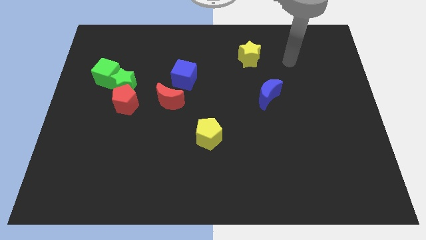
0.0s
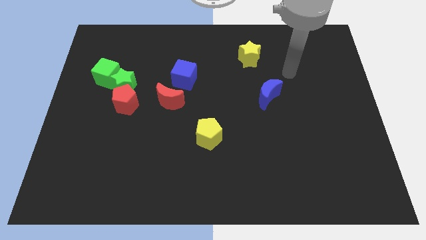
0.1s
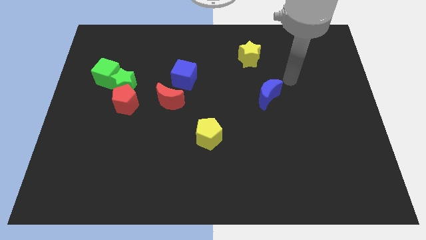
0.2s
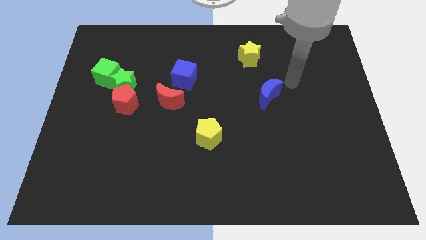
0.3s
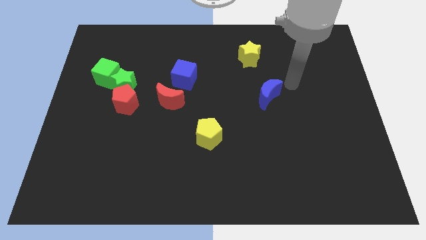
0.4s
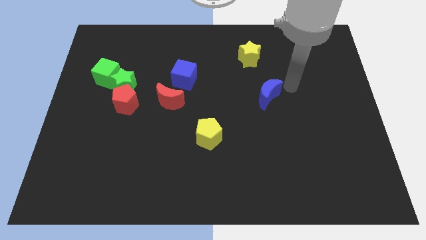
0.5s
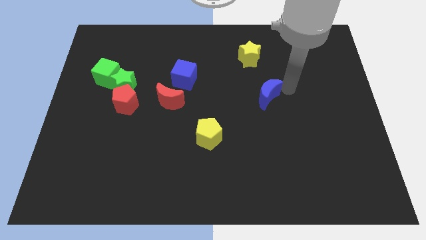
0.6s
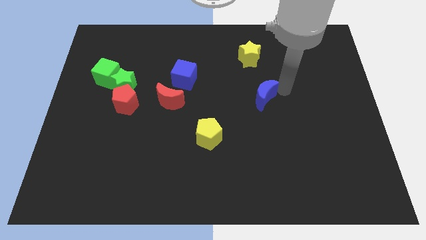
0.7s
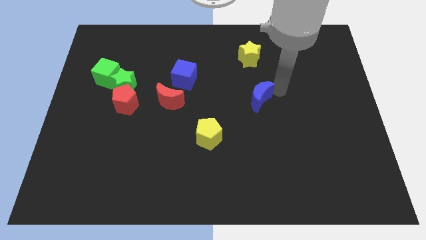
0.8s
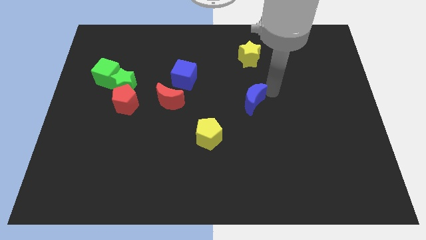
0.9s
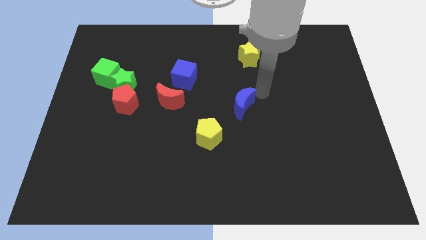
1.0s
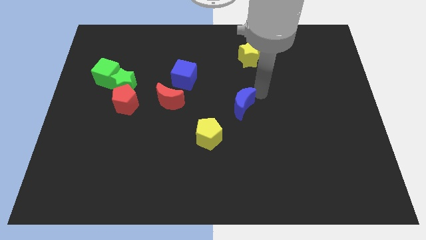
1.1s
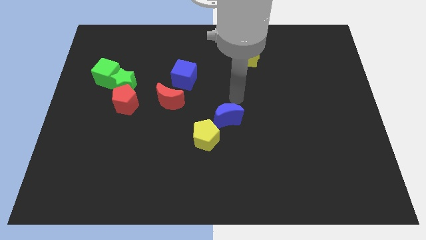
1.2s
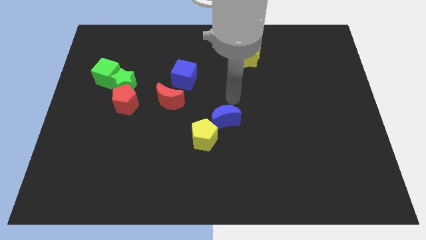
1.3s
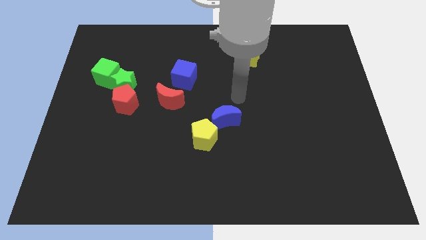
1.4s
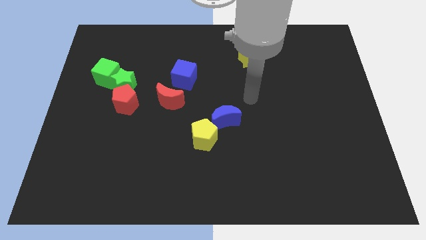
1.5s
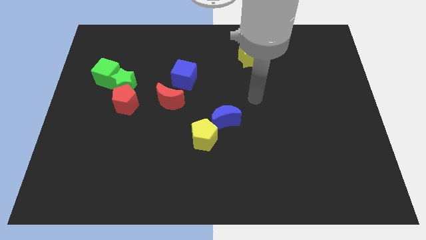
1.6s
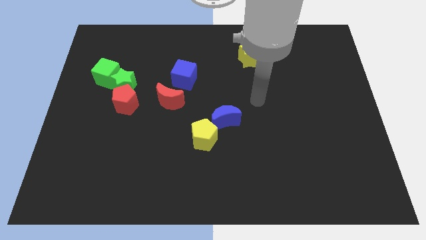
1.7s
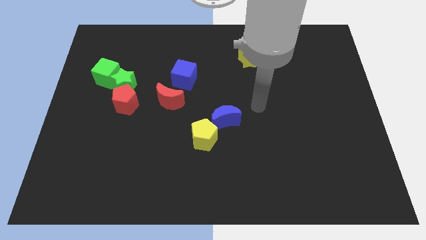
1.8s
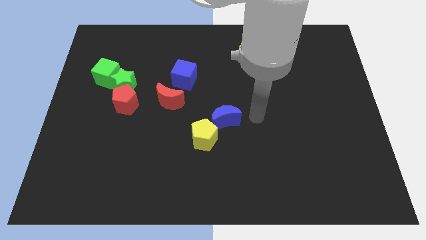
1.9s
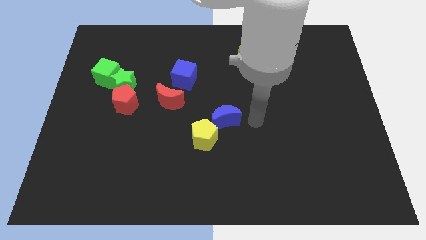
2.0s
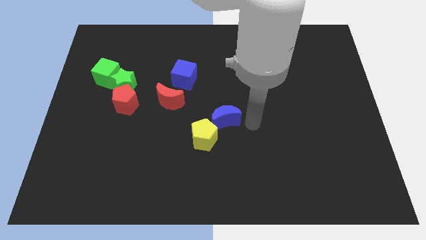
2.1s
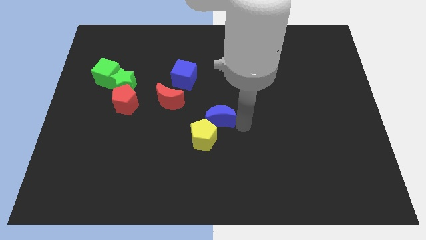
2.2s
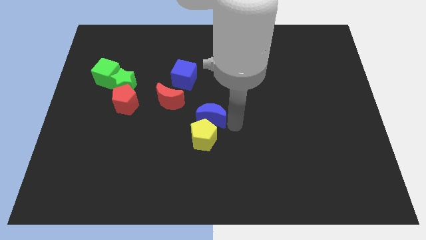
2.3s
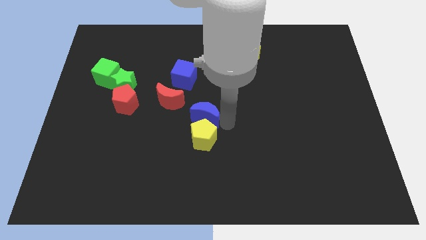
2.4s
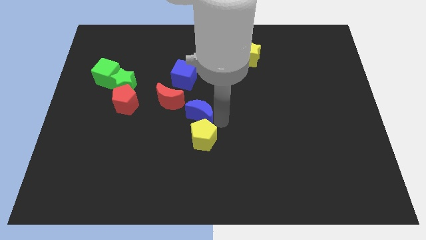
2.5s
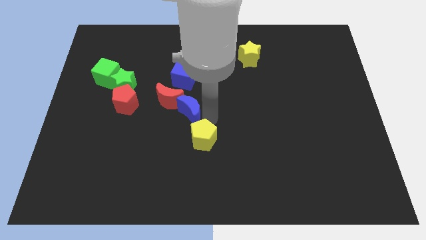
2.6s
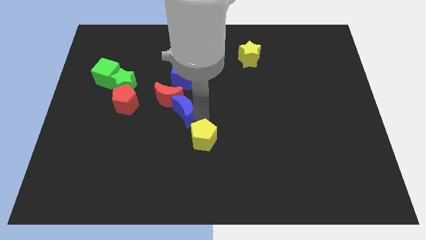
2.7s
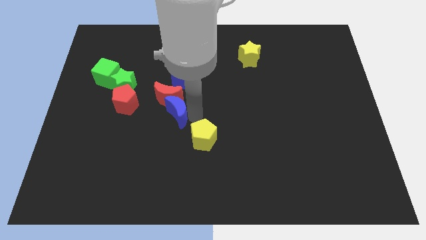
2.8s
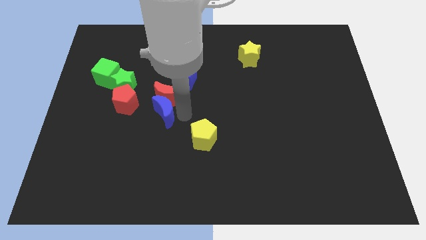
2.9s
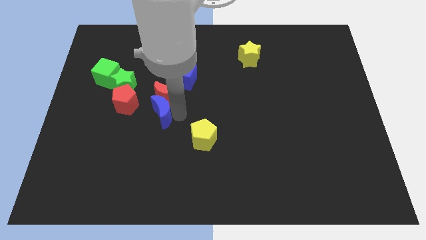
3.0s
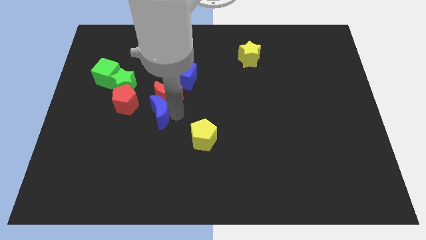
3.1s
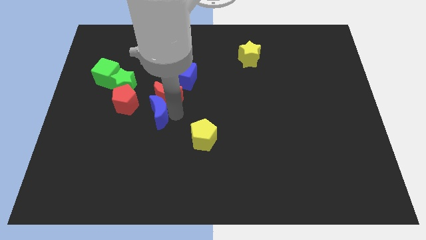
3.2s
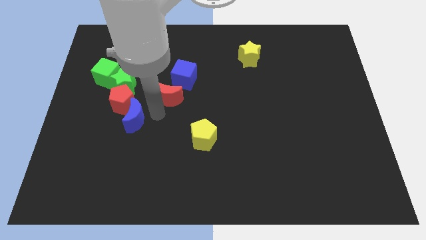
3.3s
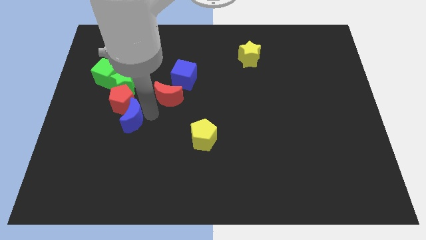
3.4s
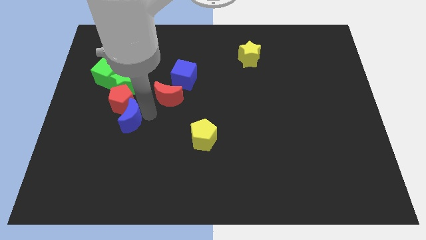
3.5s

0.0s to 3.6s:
slide the blue moon next to the red pentagon

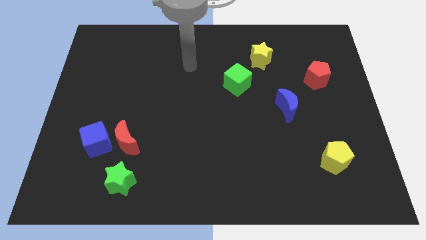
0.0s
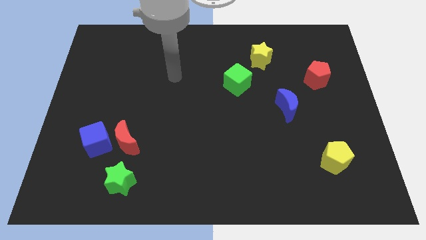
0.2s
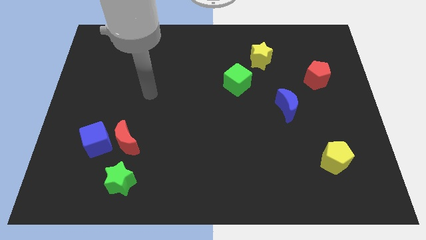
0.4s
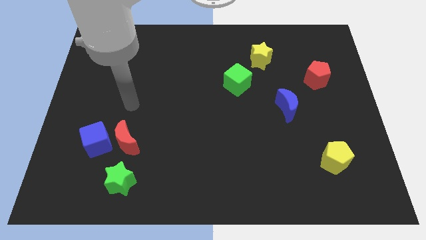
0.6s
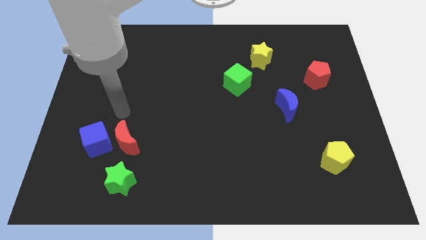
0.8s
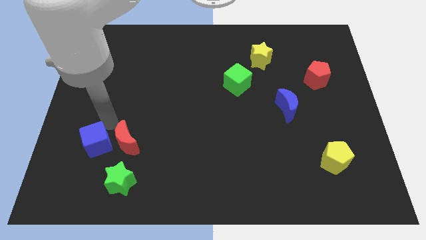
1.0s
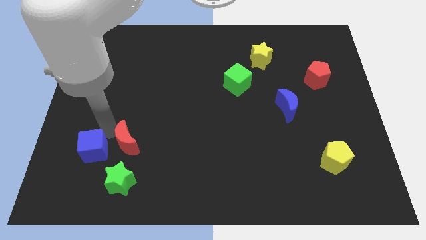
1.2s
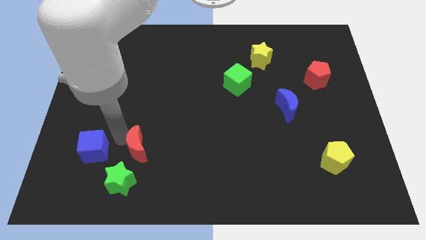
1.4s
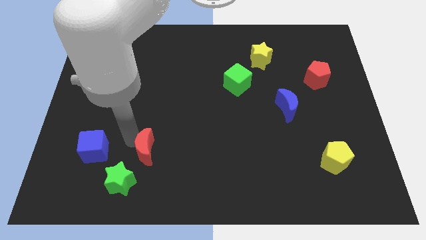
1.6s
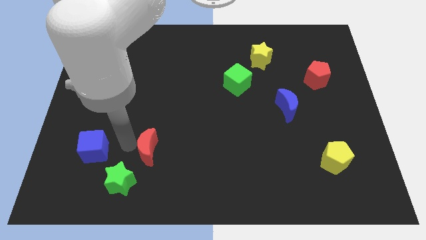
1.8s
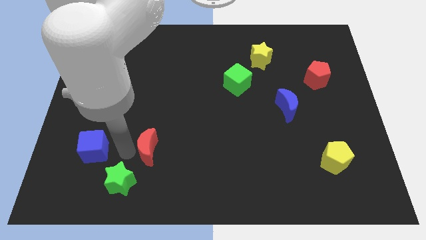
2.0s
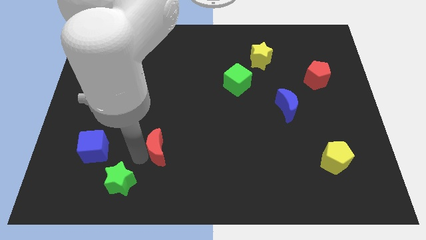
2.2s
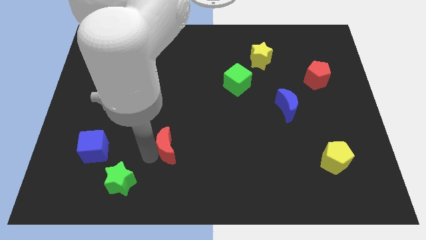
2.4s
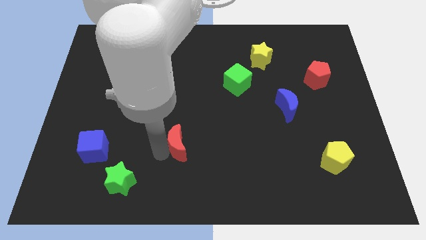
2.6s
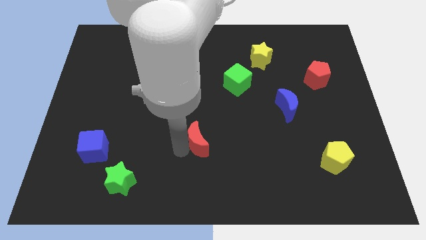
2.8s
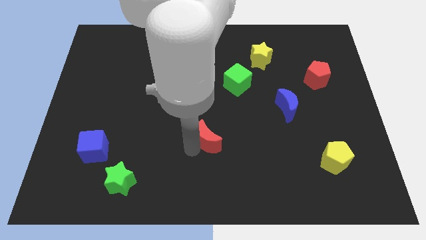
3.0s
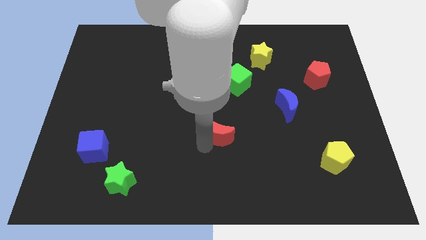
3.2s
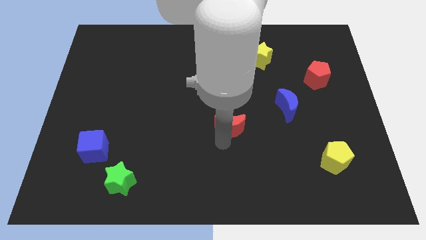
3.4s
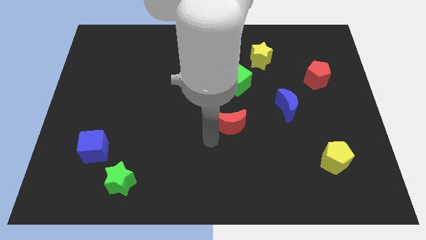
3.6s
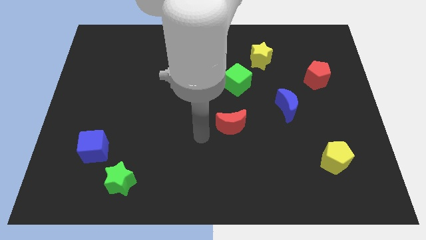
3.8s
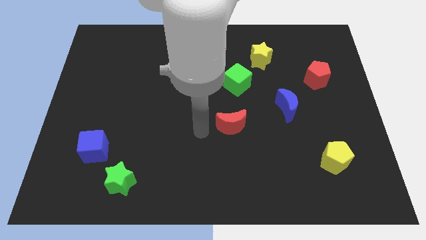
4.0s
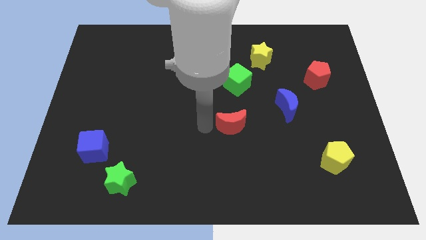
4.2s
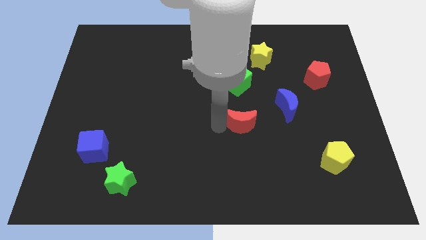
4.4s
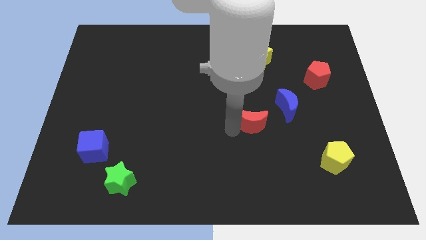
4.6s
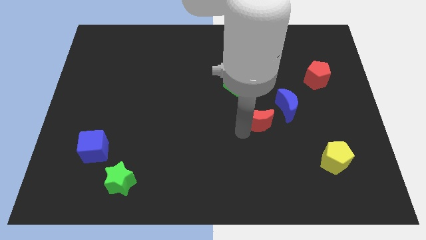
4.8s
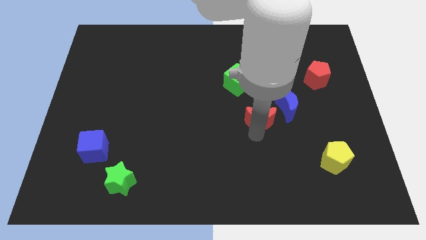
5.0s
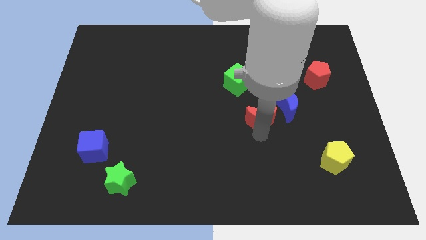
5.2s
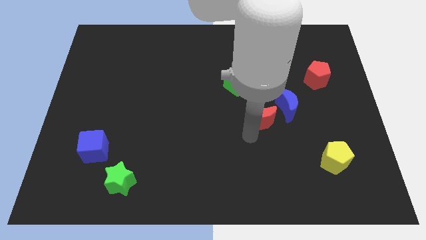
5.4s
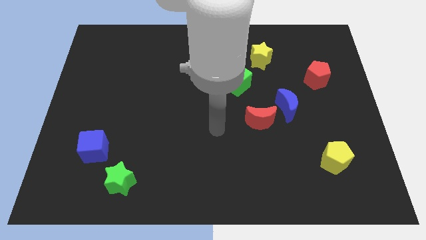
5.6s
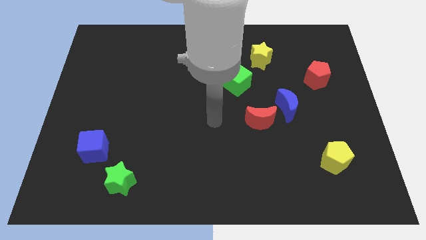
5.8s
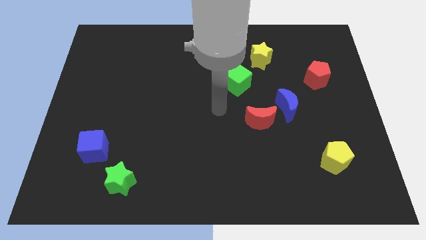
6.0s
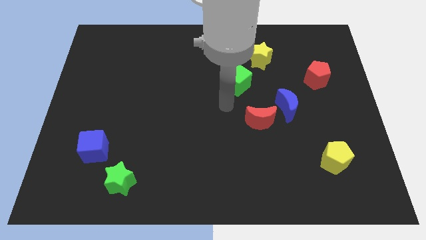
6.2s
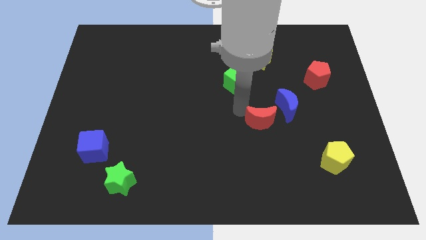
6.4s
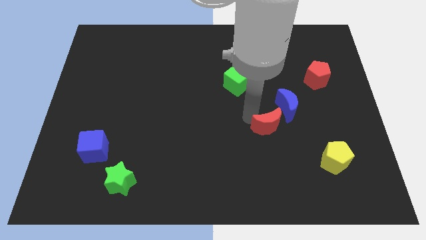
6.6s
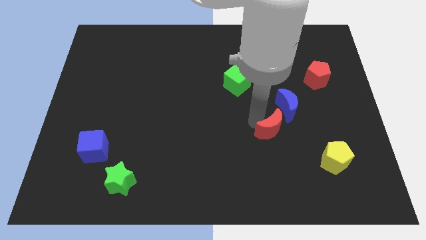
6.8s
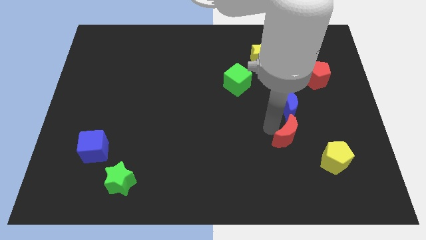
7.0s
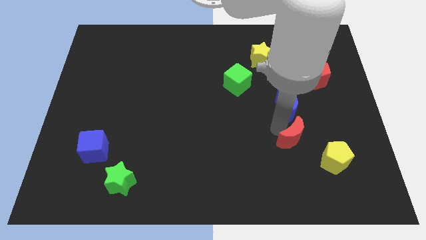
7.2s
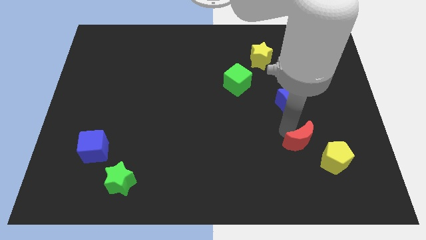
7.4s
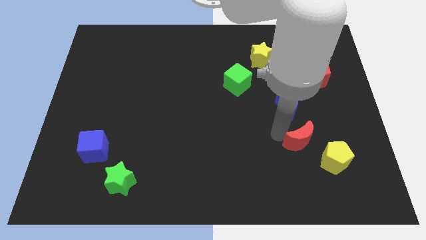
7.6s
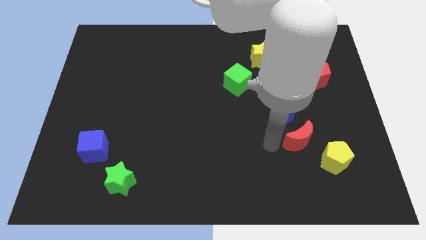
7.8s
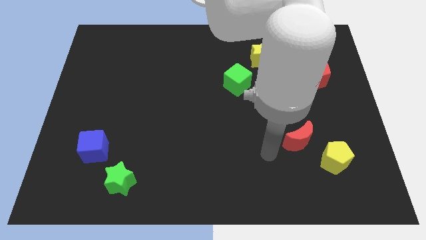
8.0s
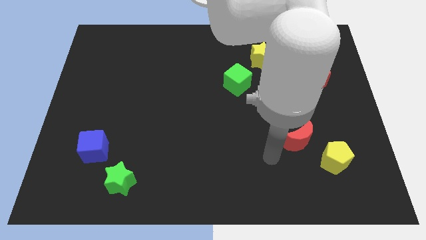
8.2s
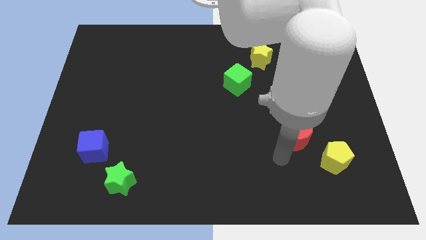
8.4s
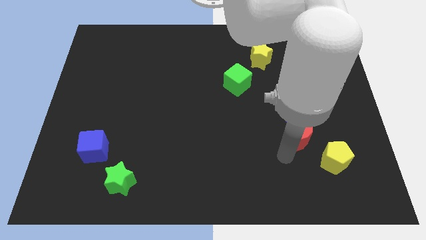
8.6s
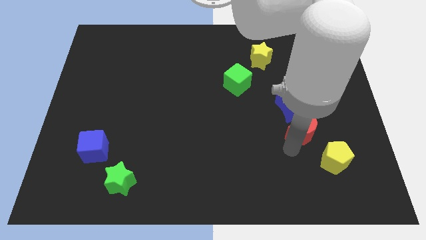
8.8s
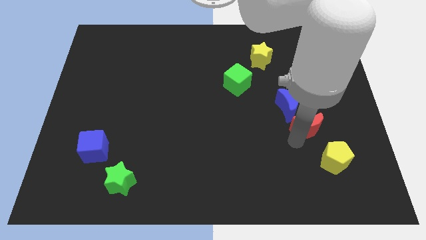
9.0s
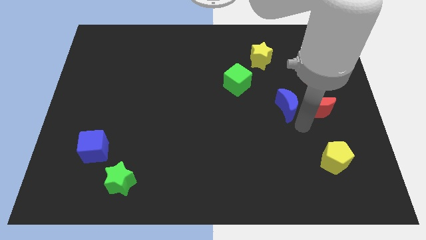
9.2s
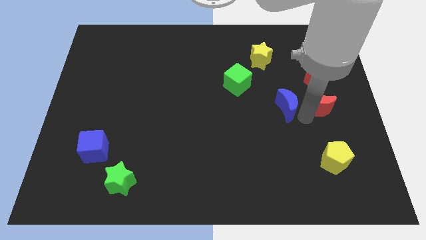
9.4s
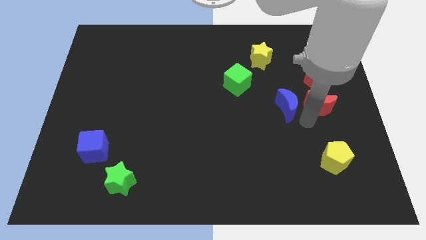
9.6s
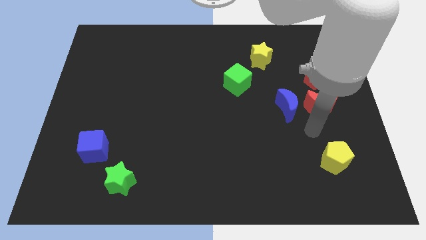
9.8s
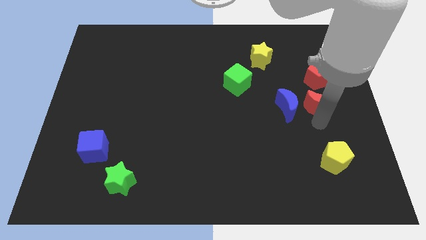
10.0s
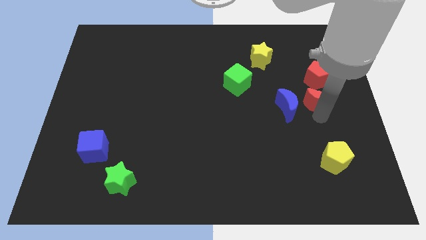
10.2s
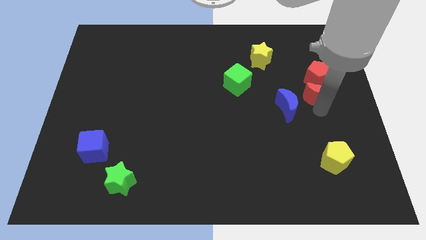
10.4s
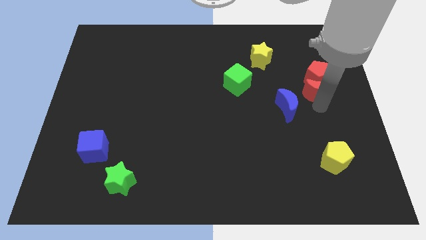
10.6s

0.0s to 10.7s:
put the red moon next to the red pentagon
